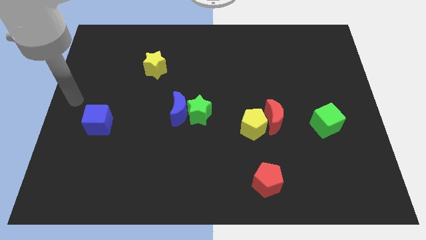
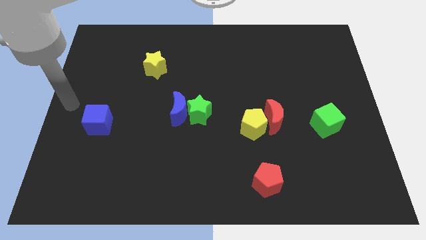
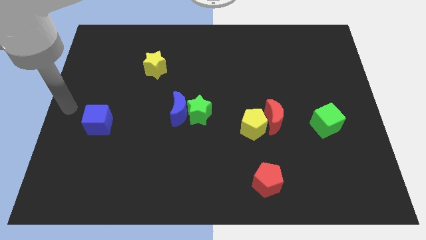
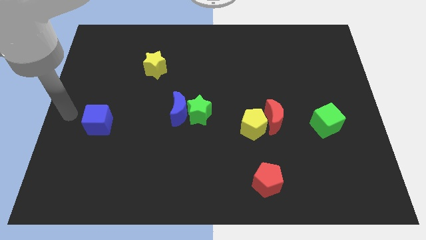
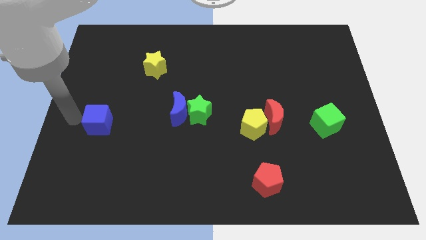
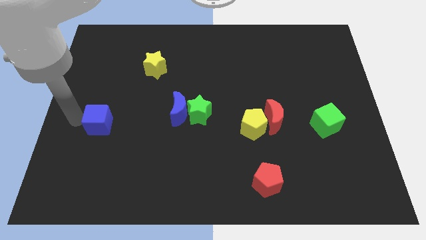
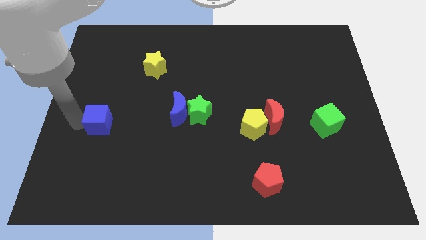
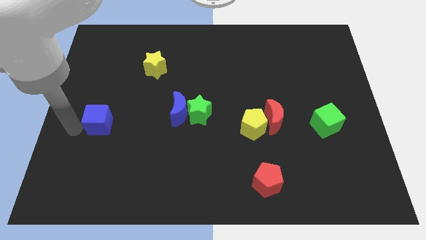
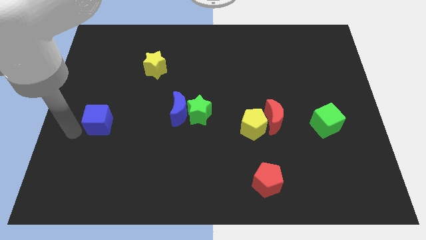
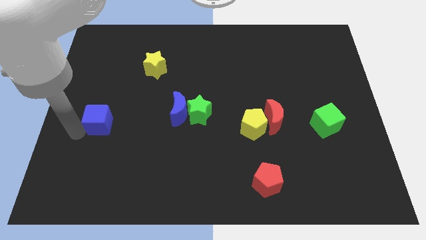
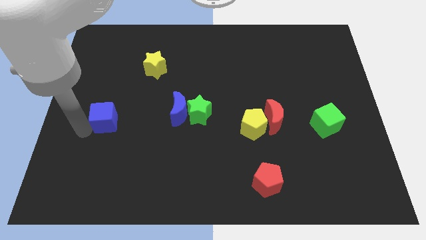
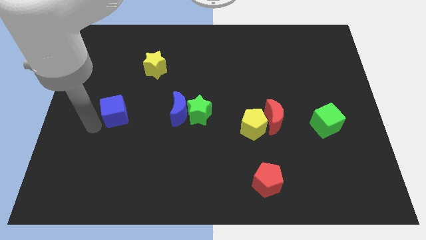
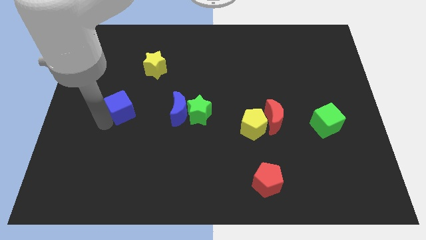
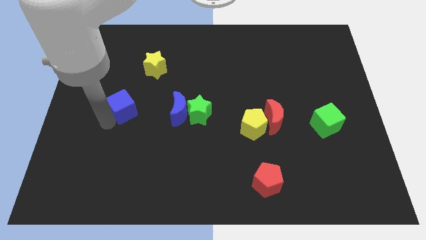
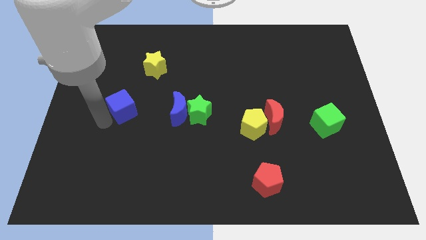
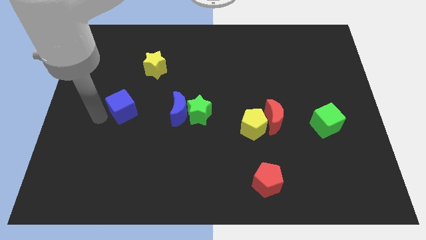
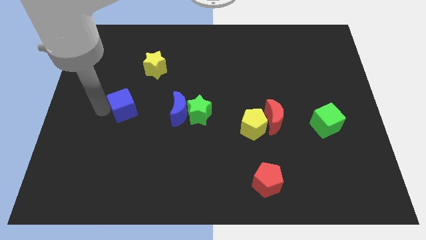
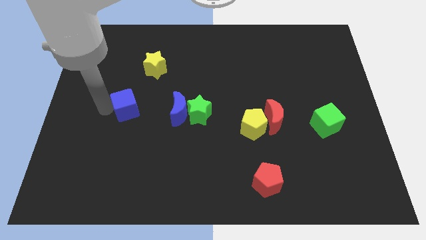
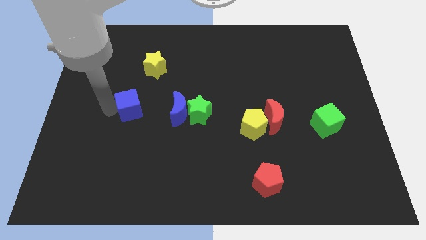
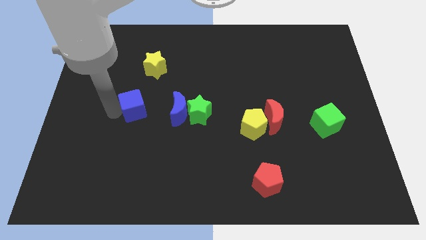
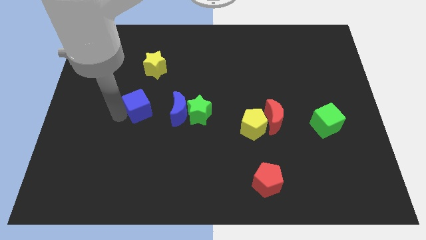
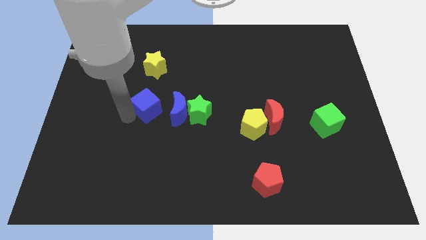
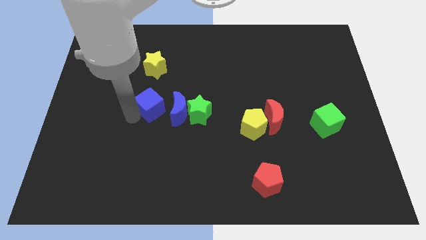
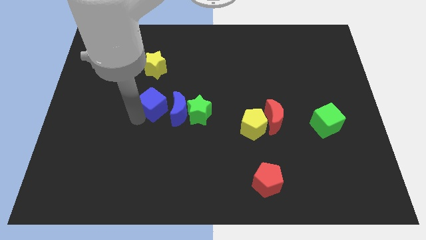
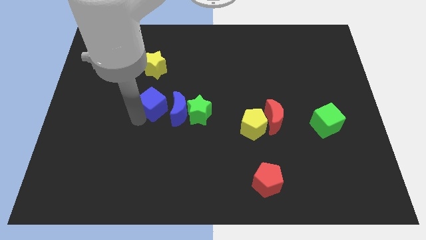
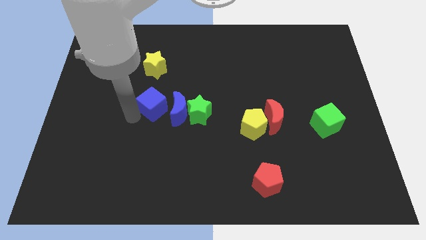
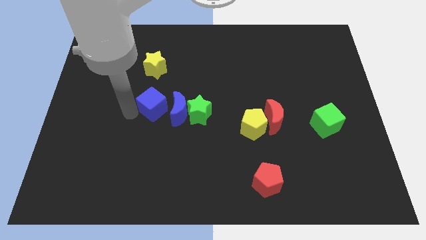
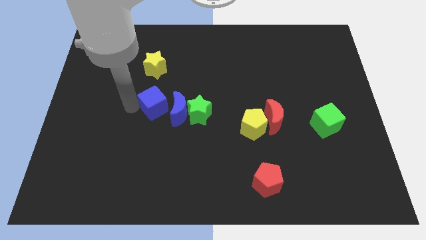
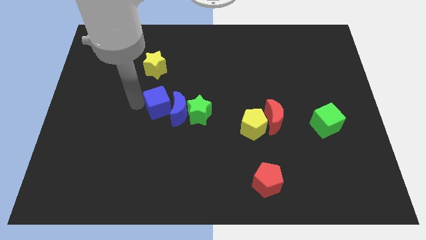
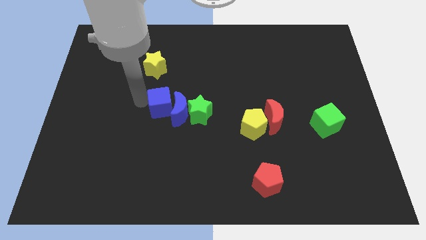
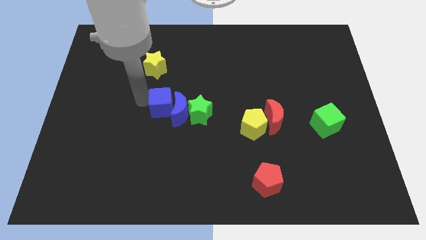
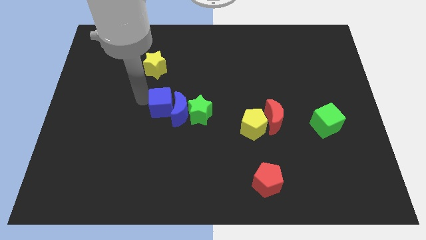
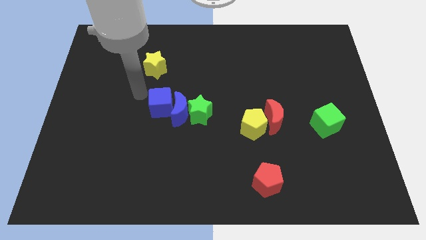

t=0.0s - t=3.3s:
push the blue cube into the blue crescent

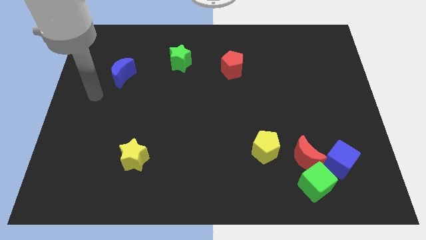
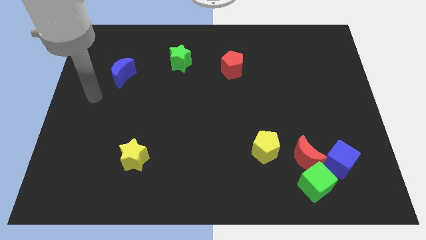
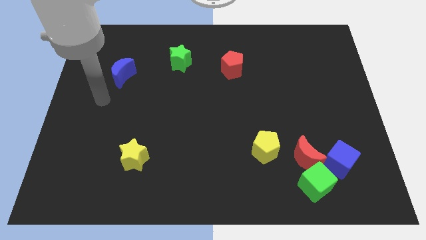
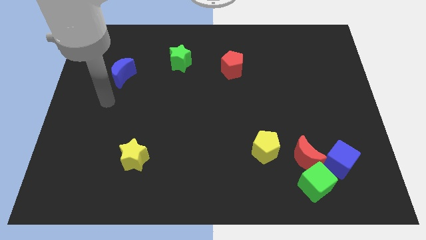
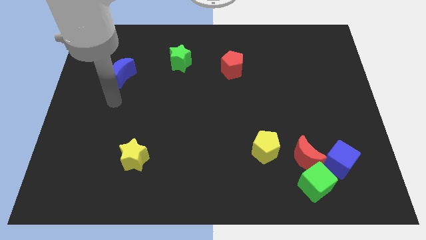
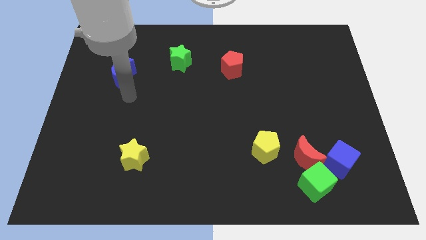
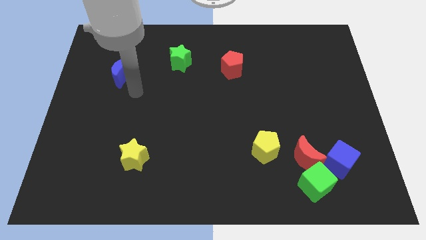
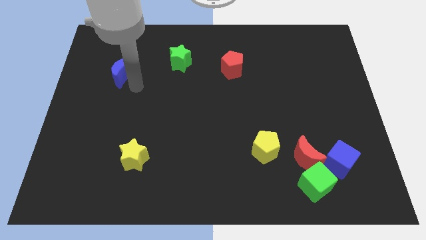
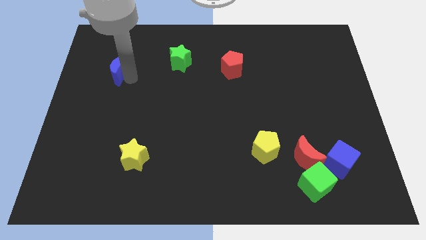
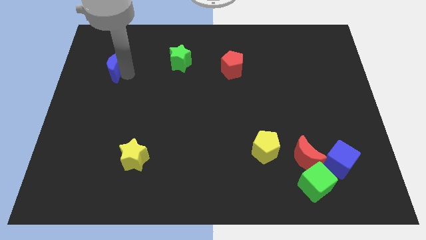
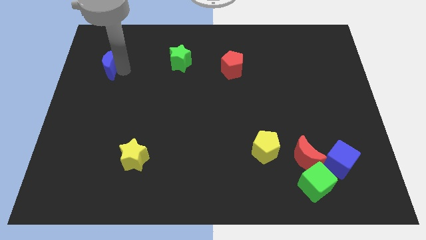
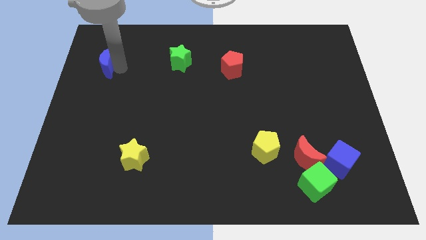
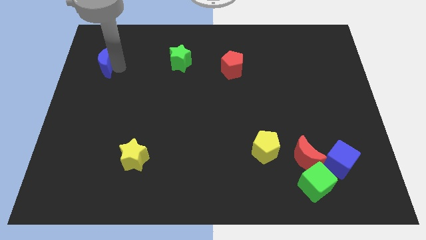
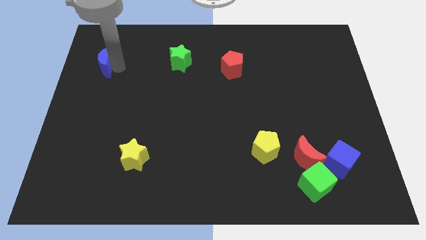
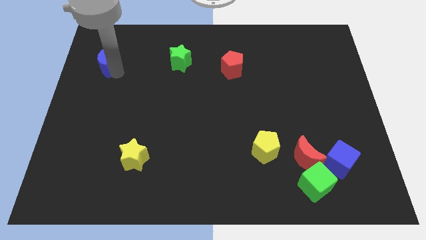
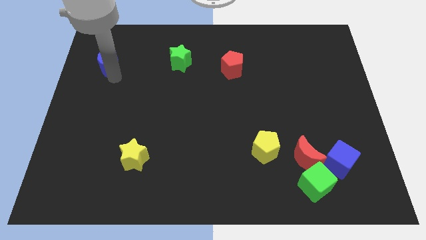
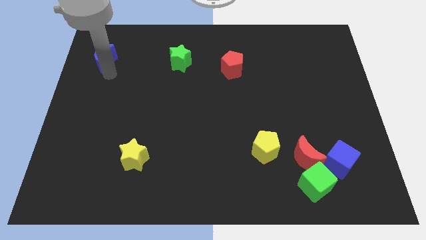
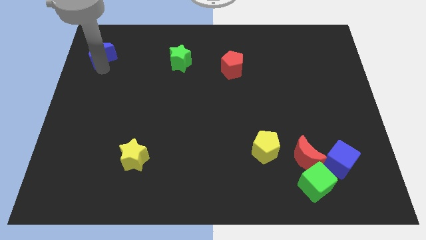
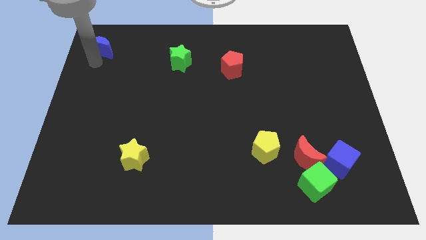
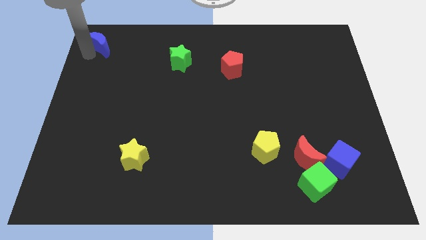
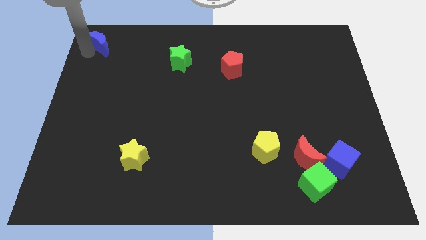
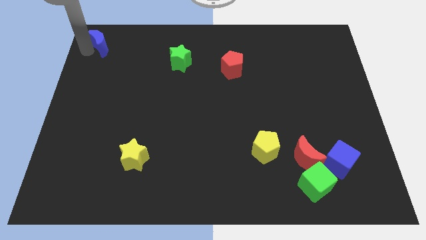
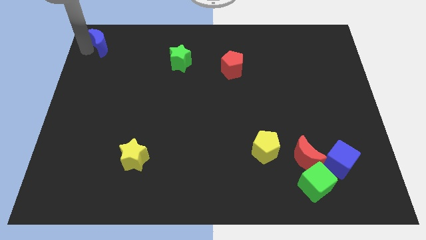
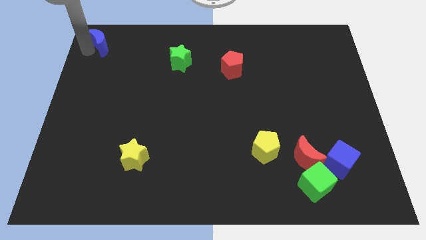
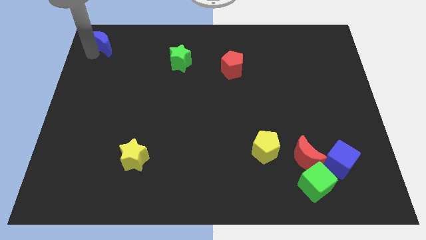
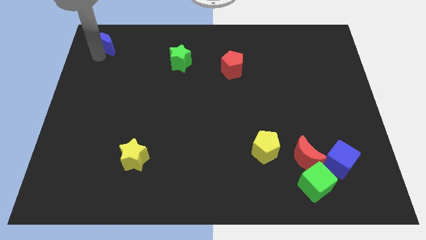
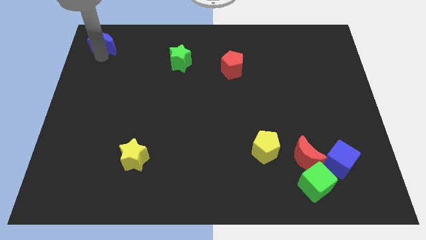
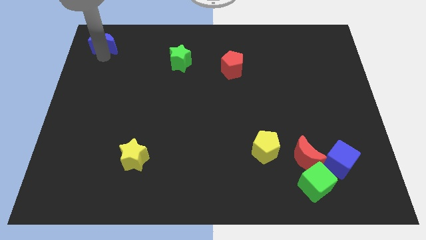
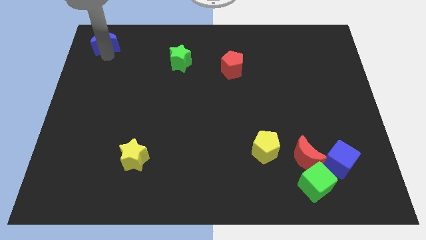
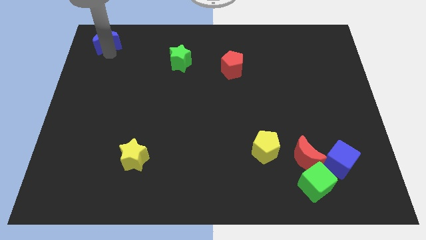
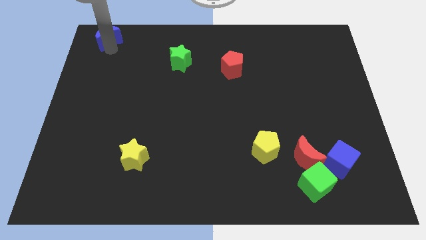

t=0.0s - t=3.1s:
slide blue moon towards top left

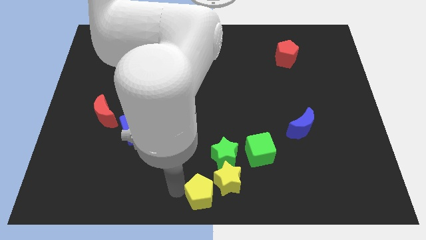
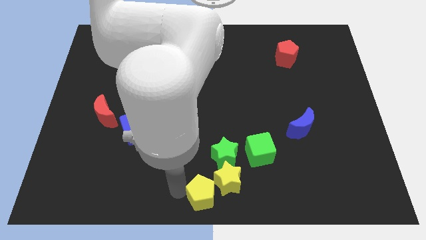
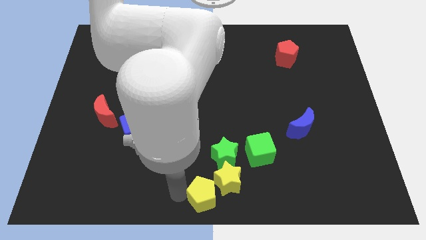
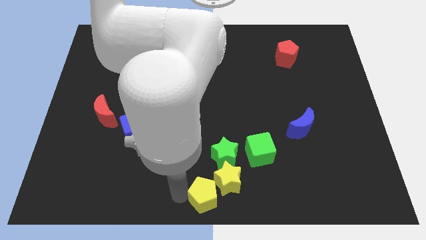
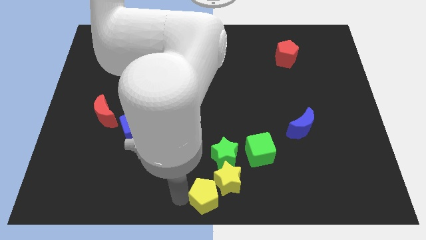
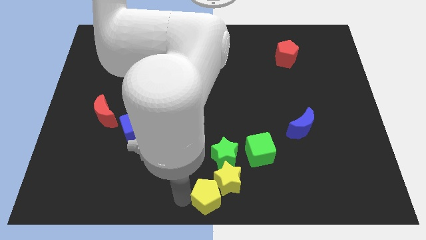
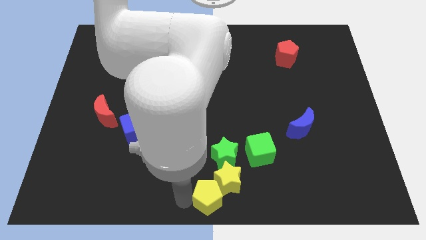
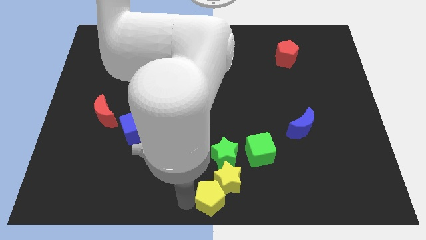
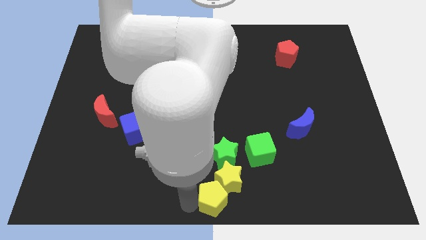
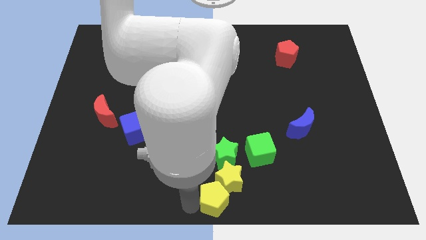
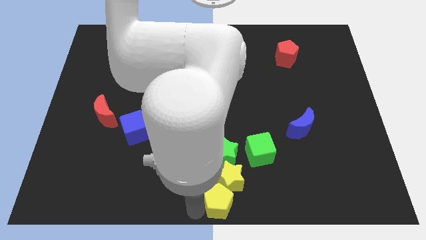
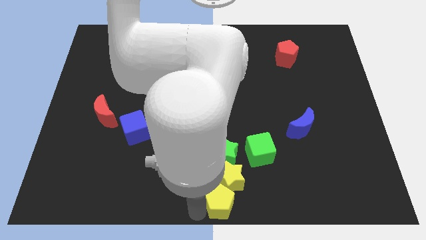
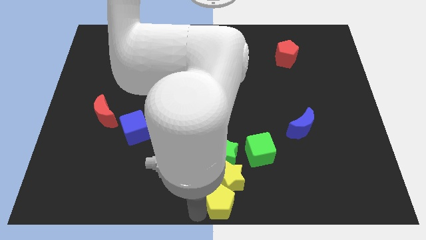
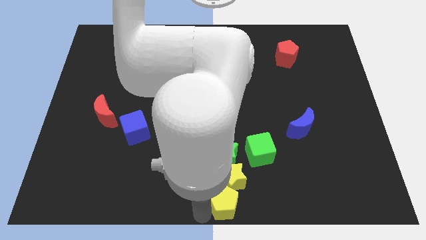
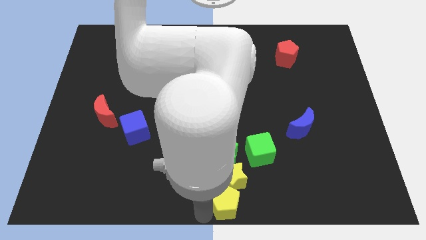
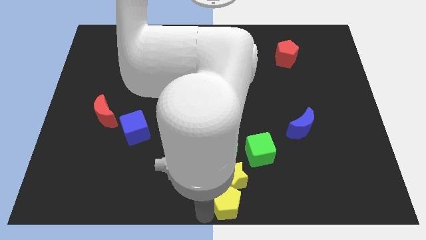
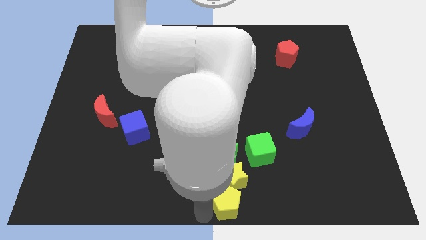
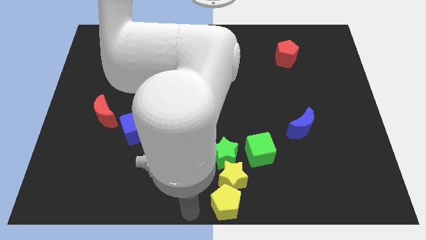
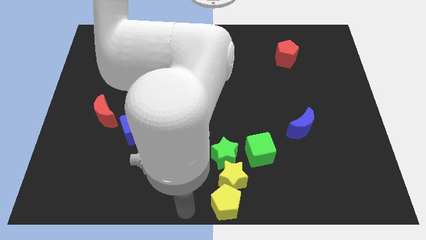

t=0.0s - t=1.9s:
put the yellow pentagon at the bottom of the yellow star

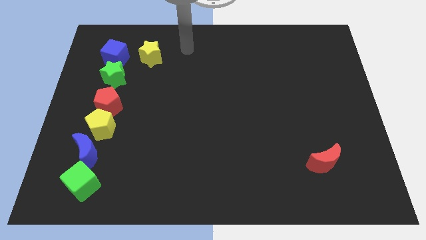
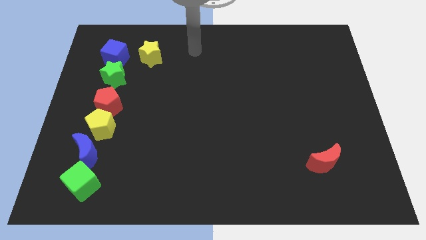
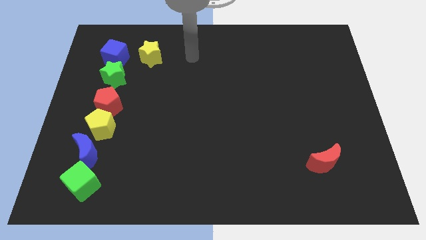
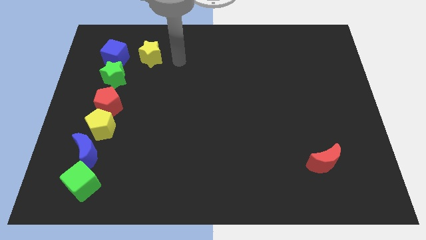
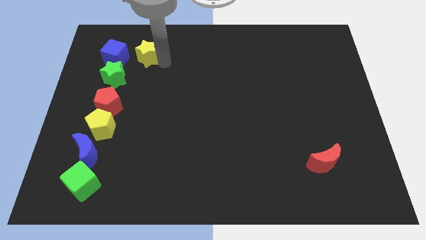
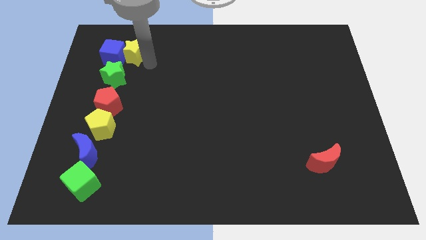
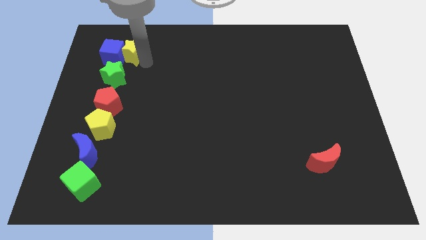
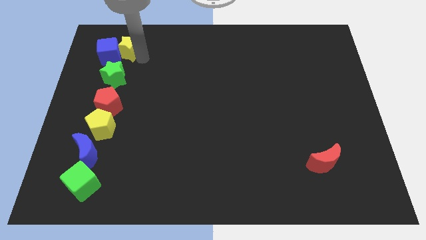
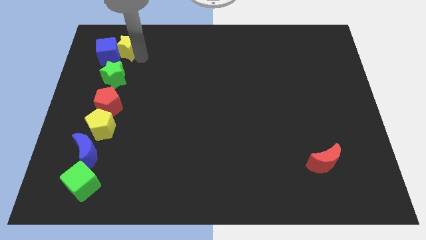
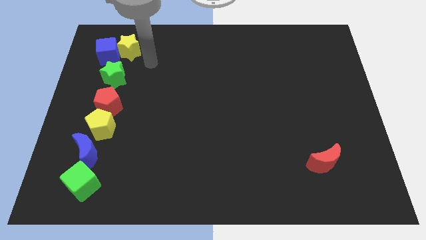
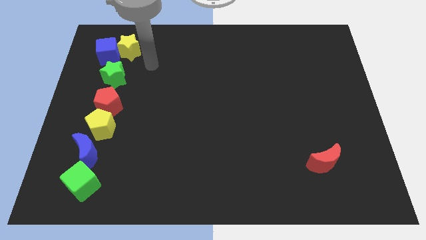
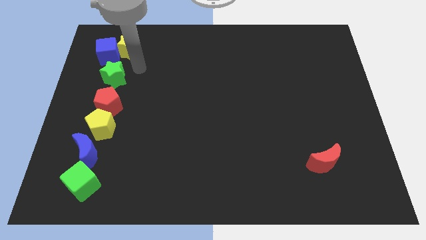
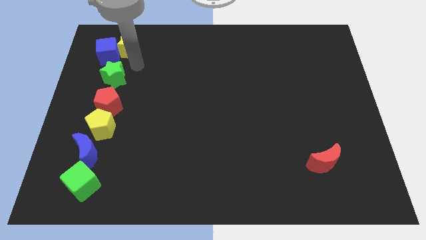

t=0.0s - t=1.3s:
push the yellow star into the blue cube from the right
